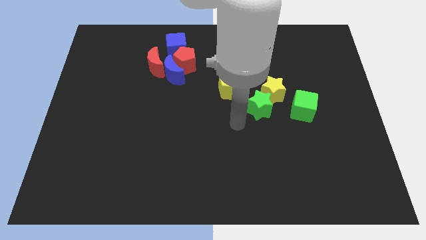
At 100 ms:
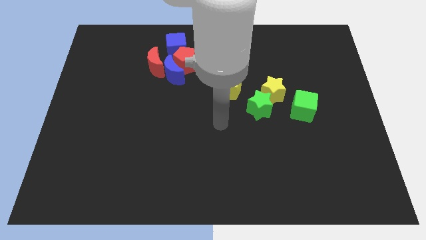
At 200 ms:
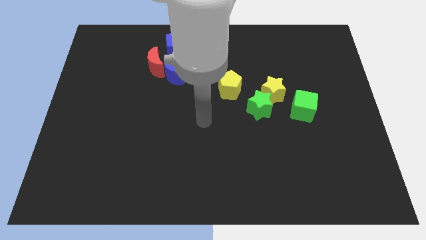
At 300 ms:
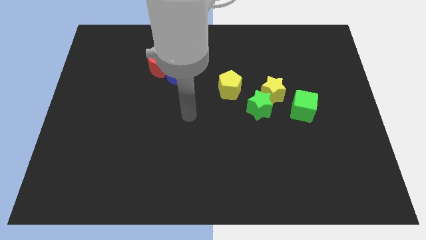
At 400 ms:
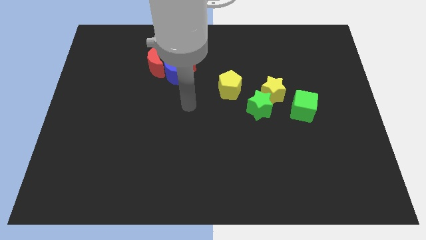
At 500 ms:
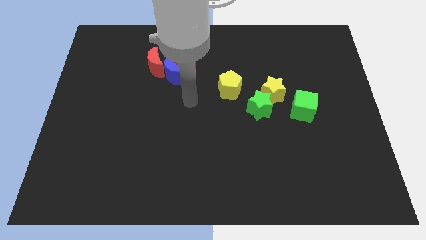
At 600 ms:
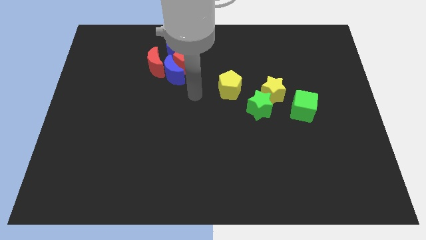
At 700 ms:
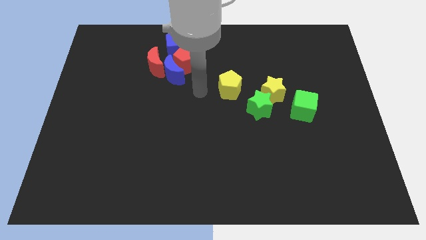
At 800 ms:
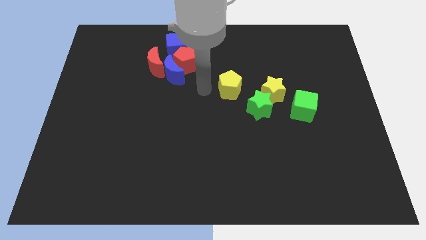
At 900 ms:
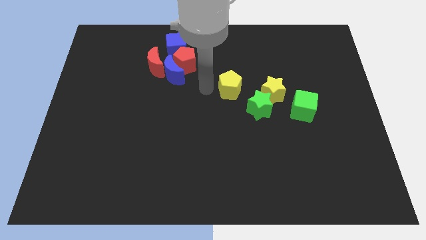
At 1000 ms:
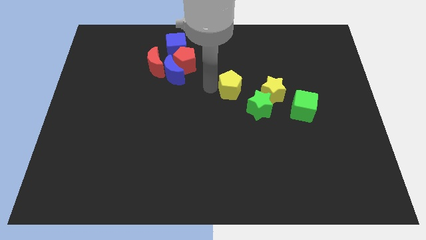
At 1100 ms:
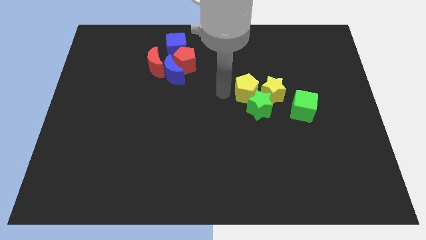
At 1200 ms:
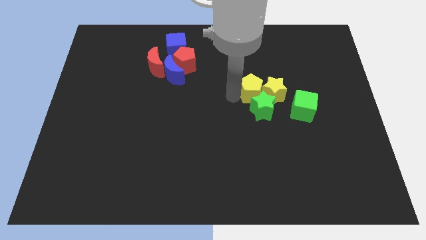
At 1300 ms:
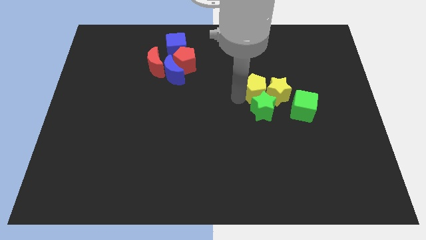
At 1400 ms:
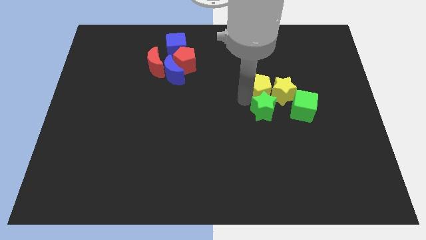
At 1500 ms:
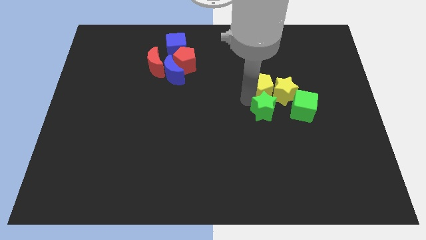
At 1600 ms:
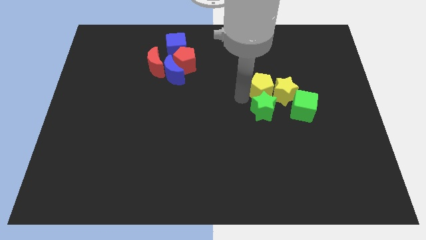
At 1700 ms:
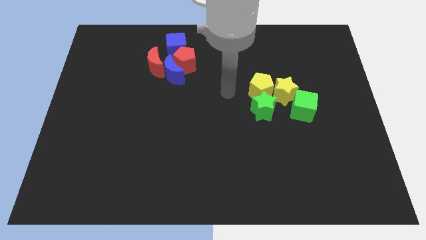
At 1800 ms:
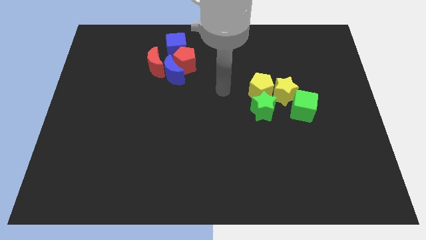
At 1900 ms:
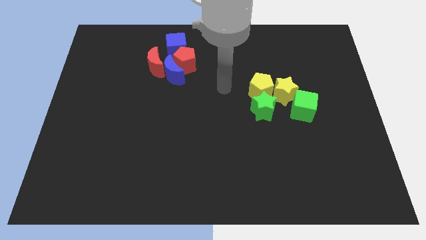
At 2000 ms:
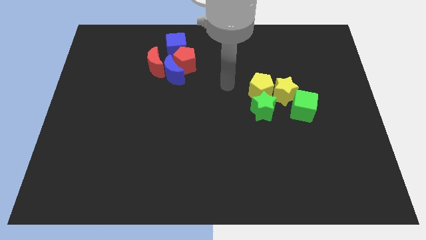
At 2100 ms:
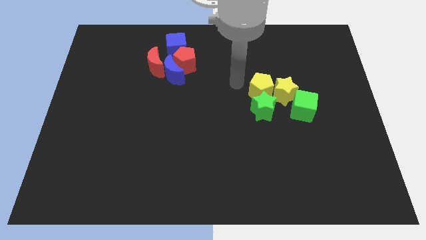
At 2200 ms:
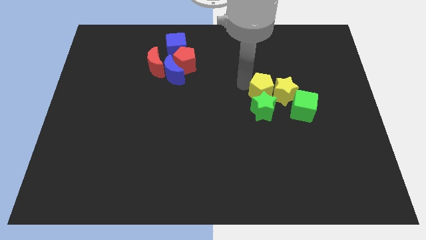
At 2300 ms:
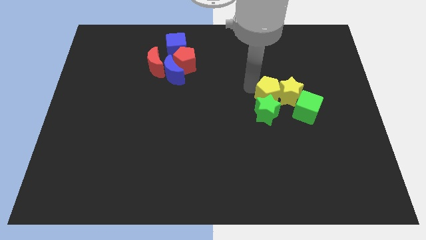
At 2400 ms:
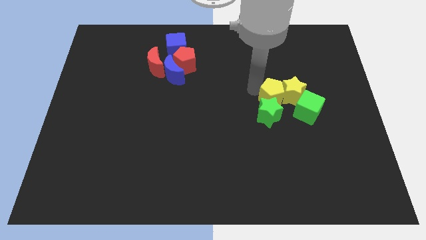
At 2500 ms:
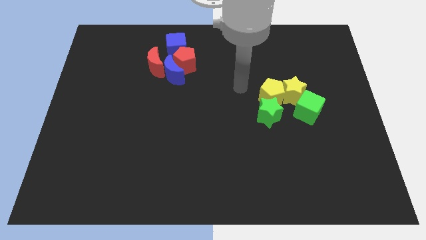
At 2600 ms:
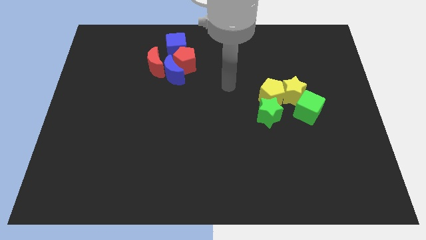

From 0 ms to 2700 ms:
push the yellow pentagon into the stars

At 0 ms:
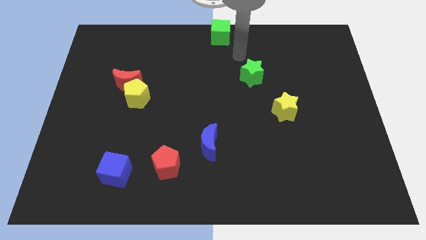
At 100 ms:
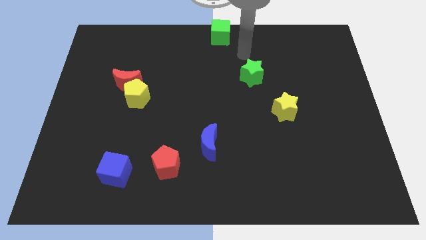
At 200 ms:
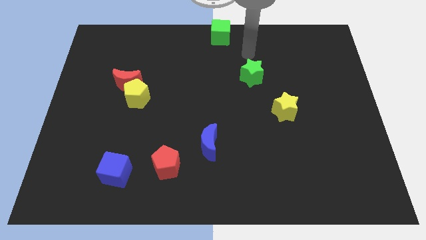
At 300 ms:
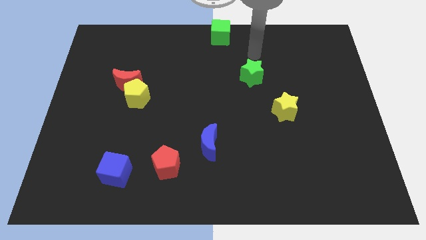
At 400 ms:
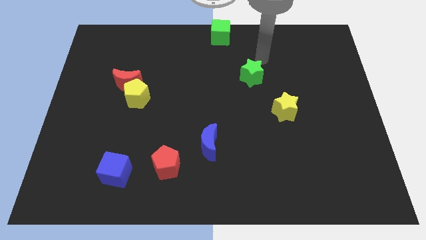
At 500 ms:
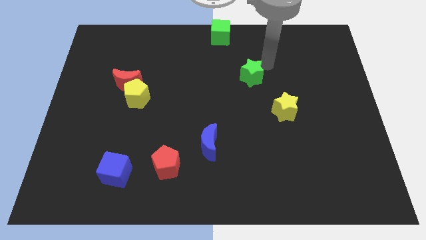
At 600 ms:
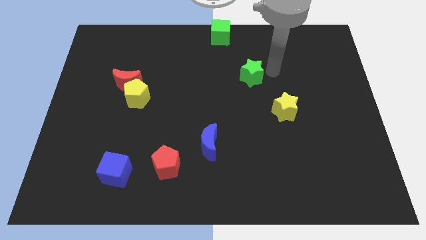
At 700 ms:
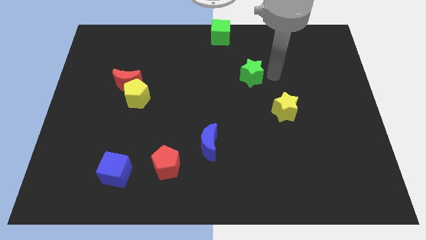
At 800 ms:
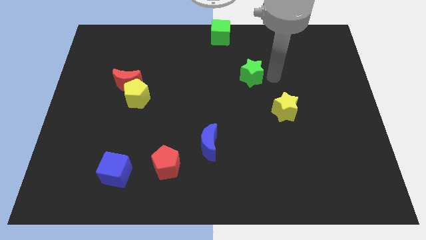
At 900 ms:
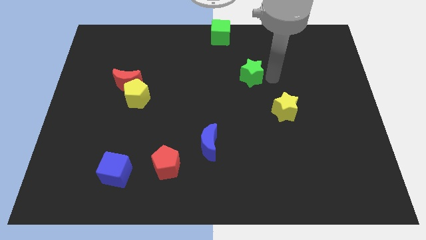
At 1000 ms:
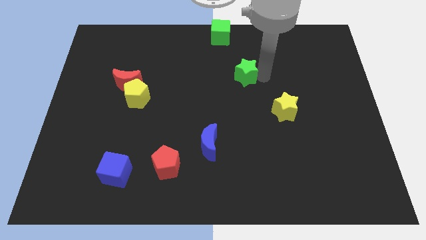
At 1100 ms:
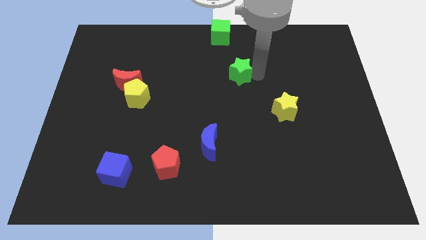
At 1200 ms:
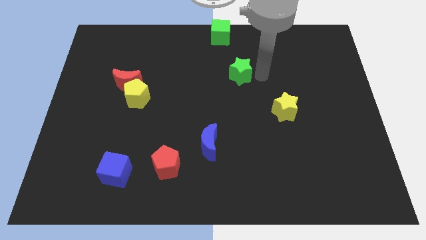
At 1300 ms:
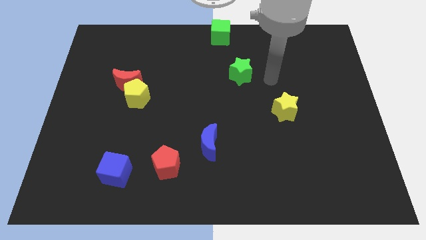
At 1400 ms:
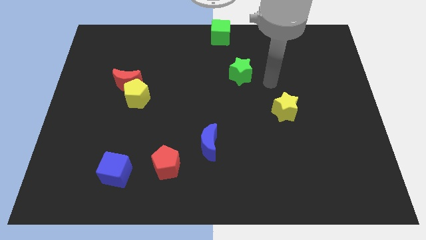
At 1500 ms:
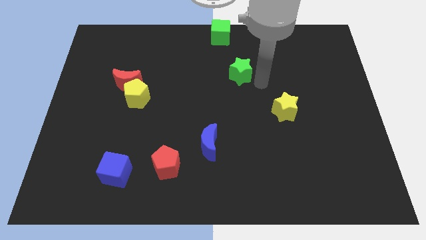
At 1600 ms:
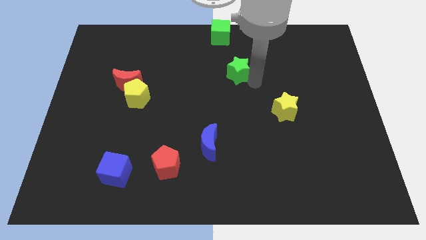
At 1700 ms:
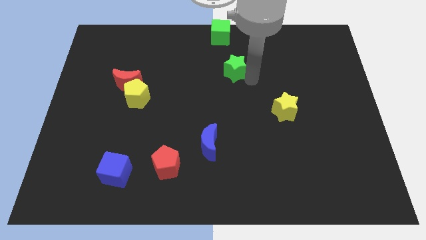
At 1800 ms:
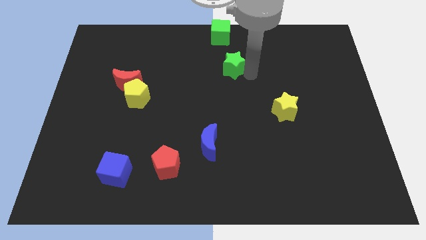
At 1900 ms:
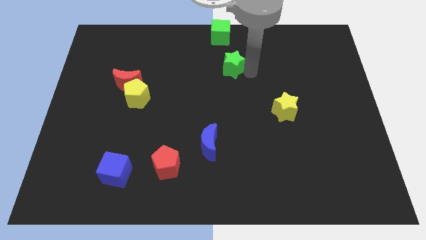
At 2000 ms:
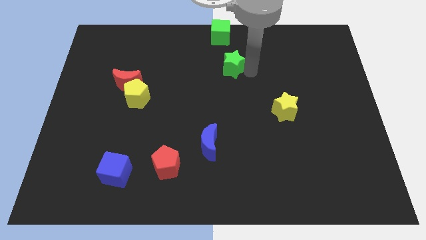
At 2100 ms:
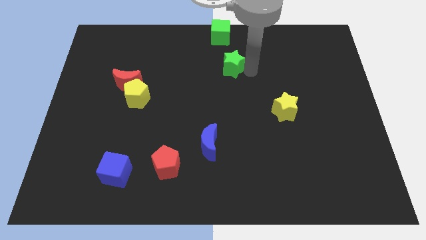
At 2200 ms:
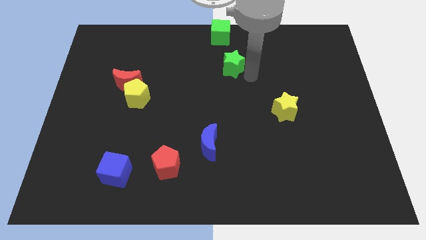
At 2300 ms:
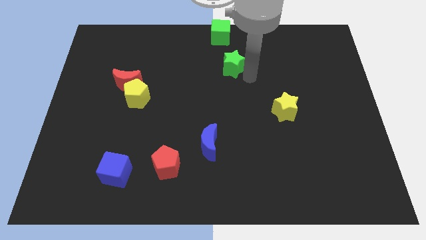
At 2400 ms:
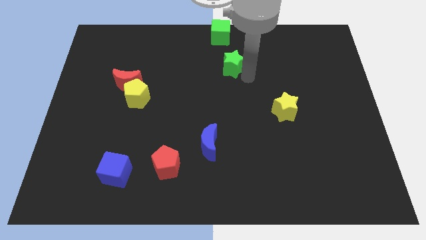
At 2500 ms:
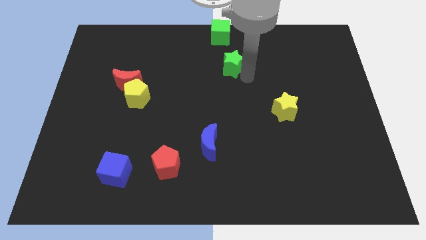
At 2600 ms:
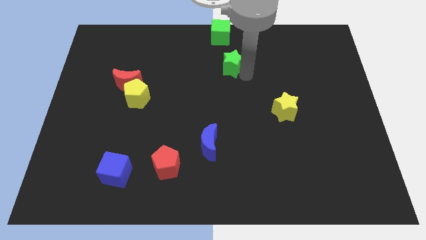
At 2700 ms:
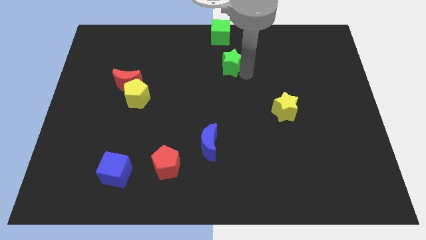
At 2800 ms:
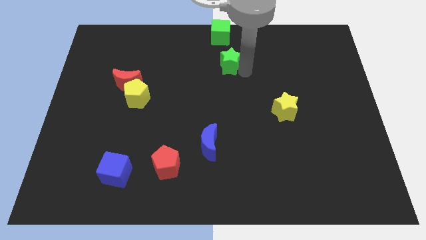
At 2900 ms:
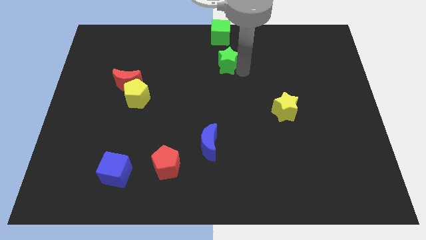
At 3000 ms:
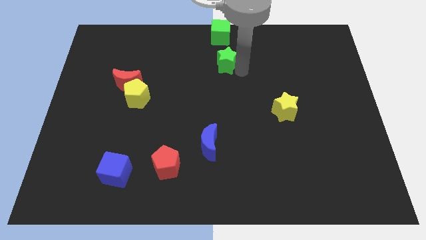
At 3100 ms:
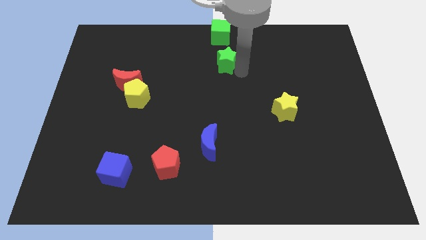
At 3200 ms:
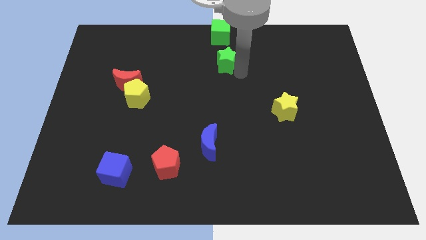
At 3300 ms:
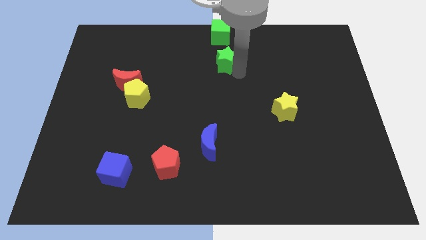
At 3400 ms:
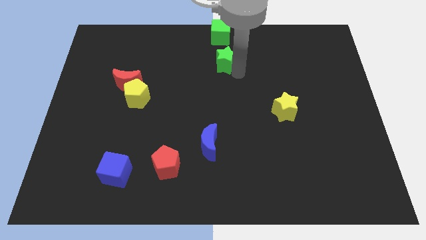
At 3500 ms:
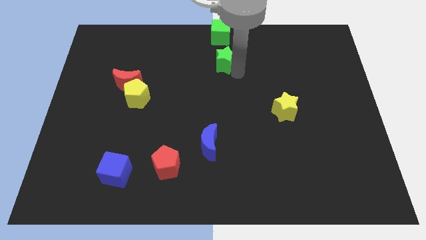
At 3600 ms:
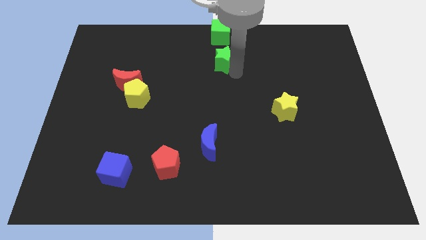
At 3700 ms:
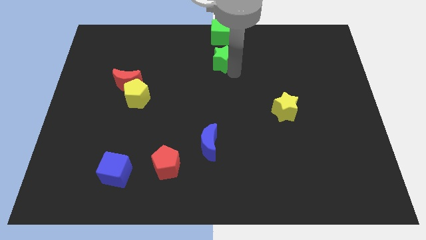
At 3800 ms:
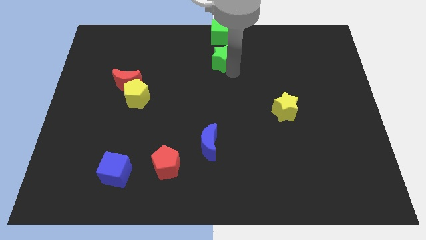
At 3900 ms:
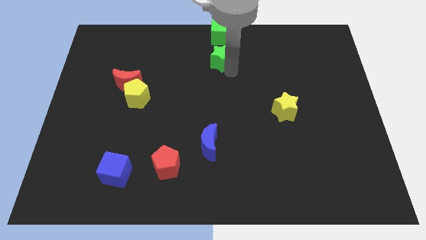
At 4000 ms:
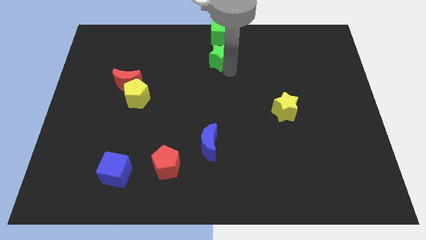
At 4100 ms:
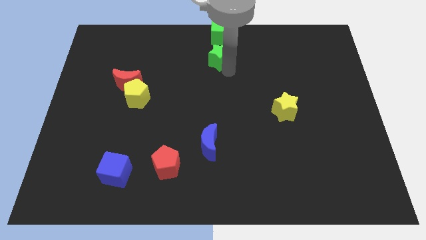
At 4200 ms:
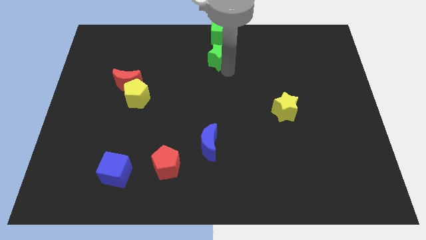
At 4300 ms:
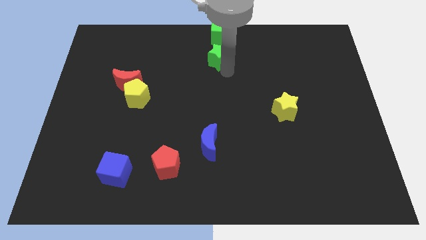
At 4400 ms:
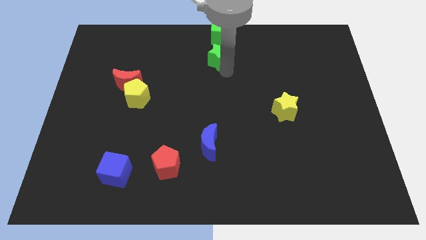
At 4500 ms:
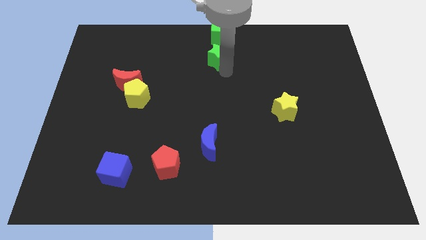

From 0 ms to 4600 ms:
push the green star vertically below the green cube

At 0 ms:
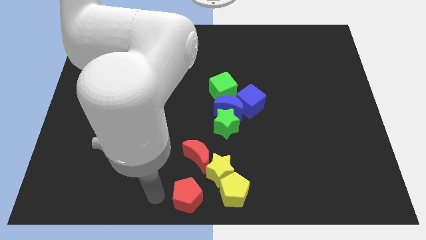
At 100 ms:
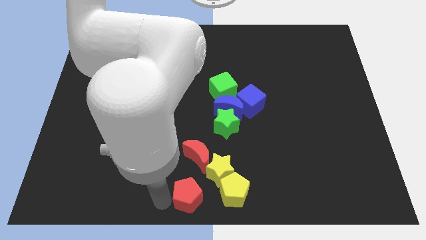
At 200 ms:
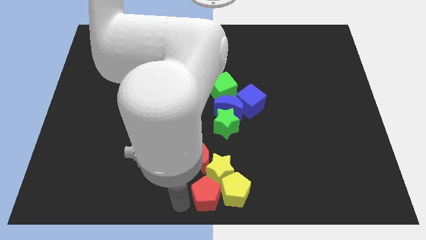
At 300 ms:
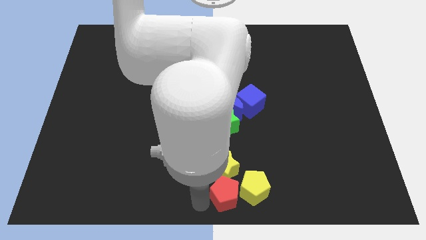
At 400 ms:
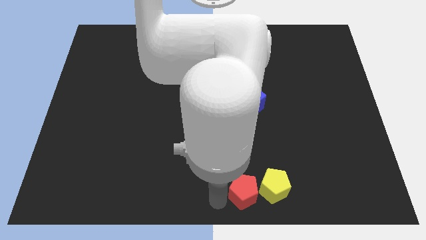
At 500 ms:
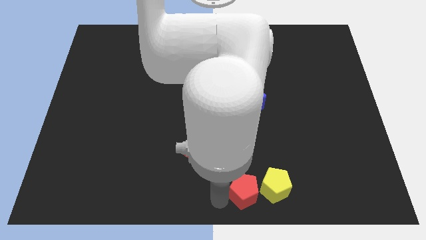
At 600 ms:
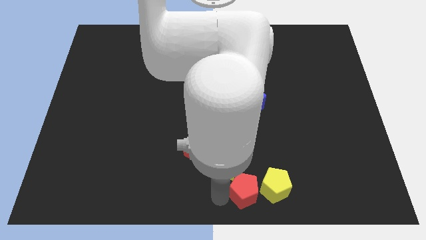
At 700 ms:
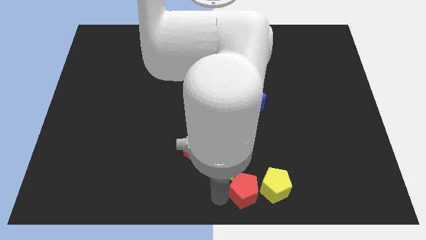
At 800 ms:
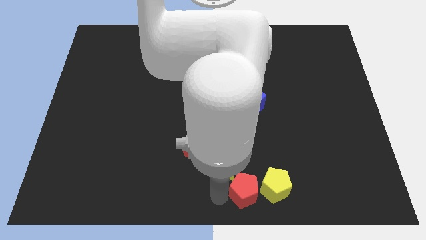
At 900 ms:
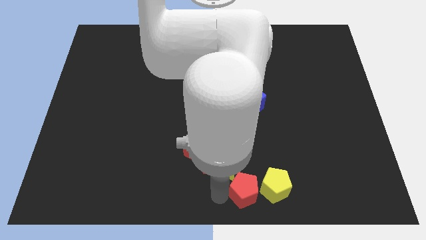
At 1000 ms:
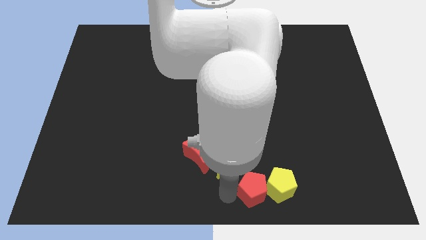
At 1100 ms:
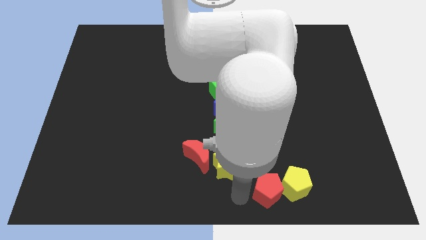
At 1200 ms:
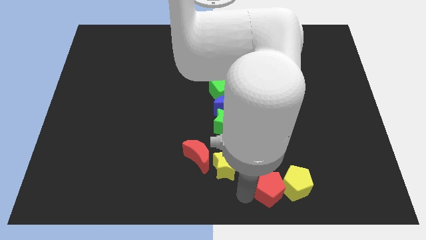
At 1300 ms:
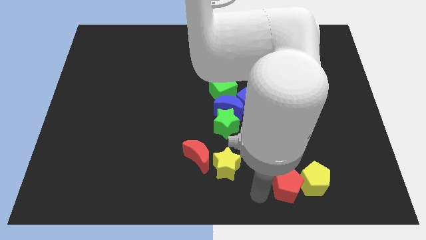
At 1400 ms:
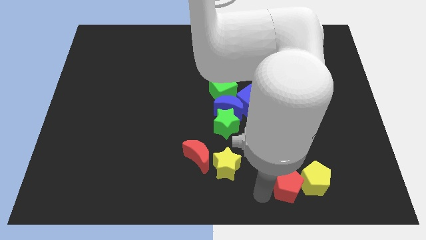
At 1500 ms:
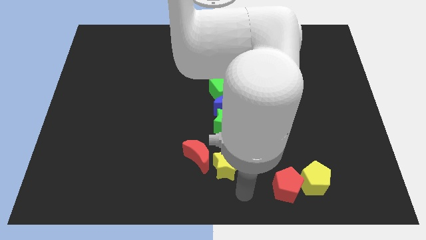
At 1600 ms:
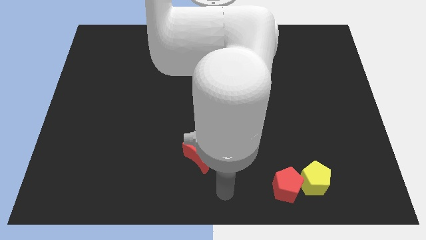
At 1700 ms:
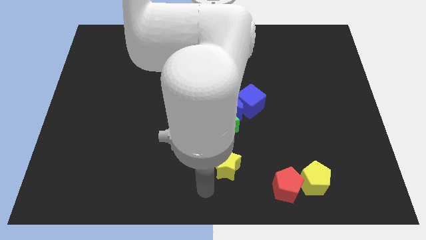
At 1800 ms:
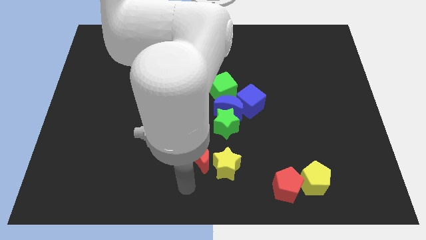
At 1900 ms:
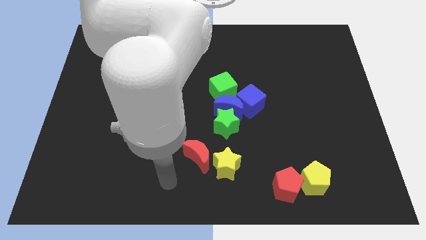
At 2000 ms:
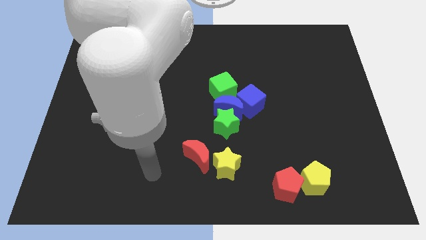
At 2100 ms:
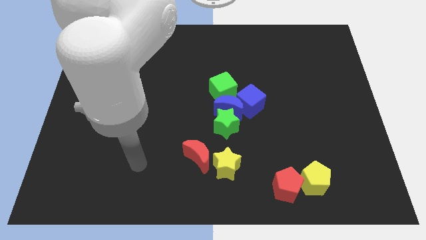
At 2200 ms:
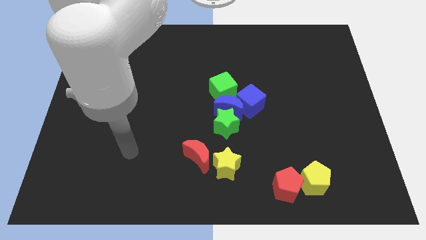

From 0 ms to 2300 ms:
push the red pentagon into the yellow pentagon
